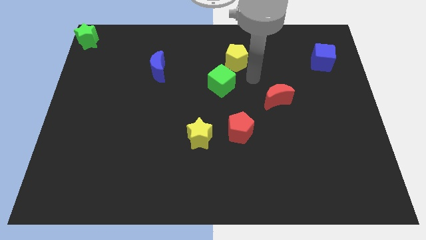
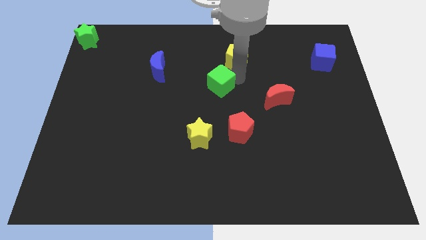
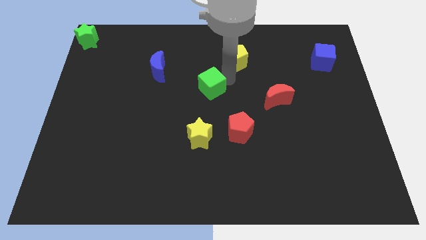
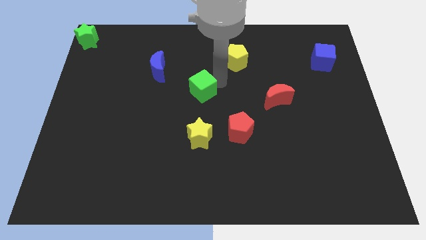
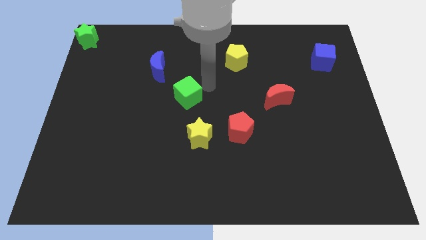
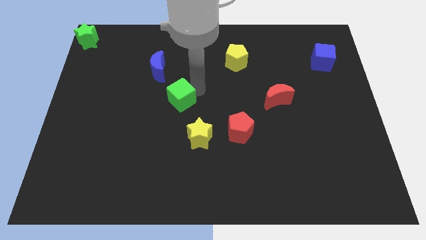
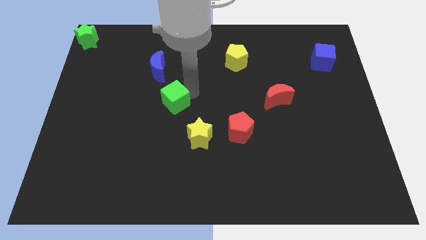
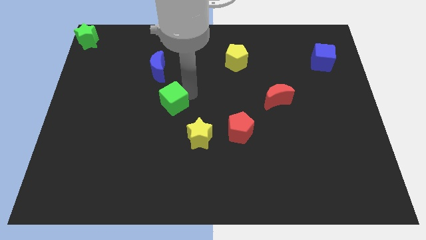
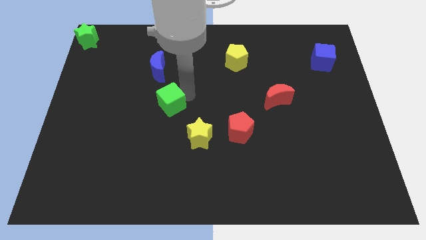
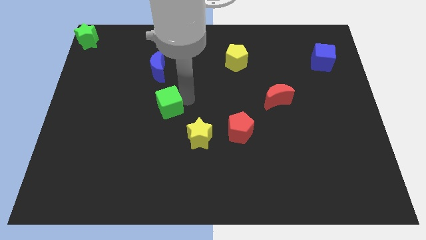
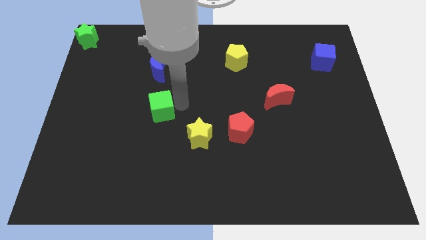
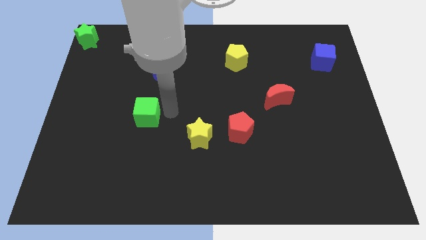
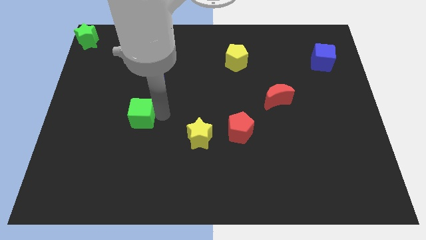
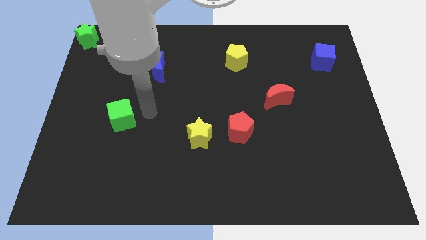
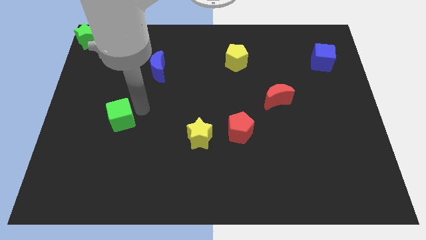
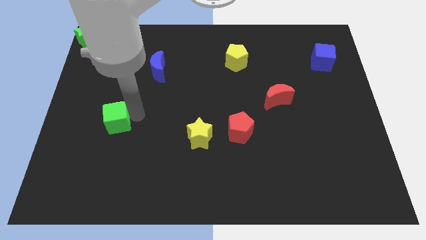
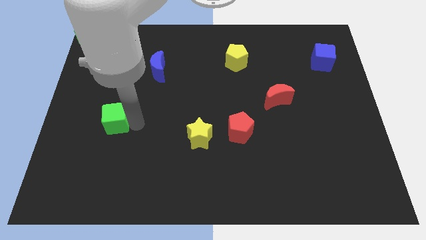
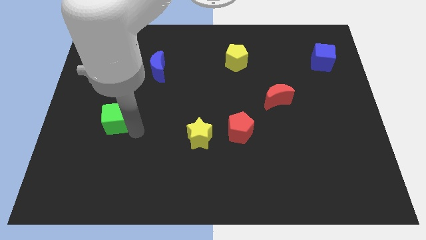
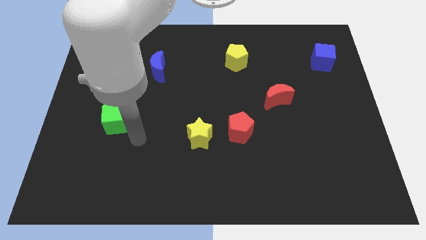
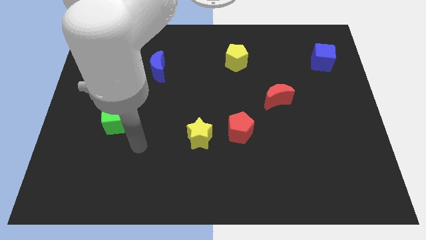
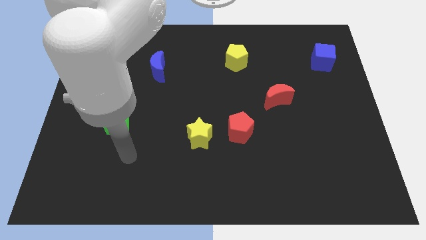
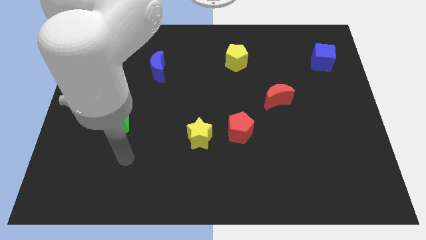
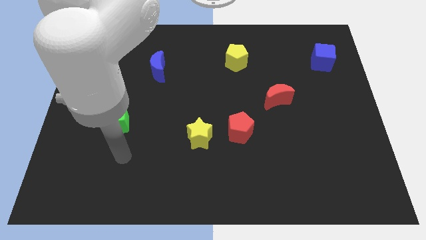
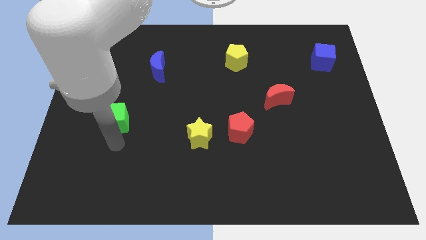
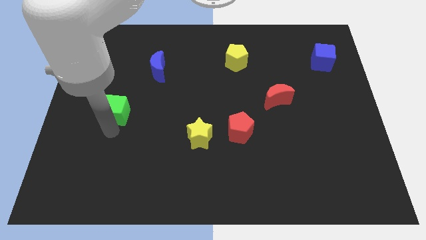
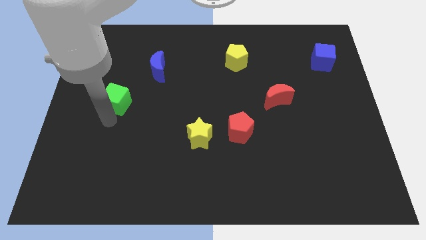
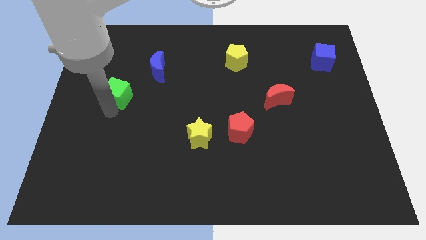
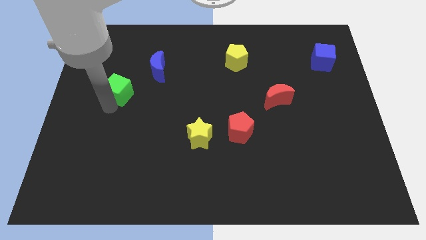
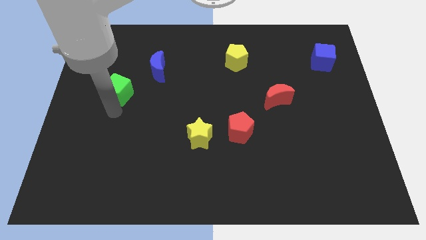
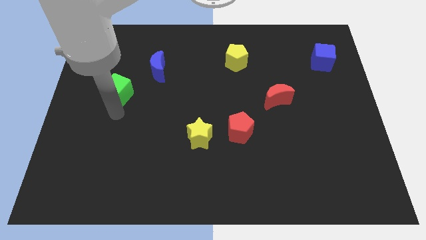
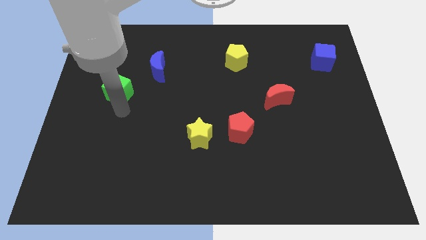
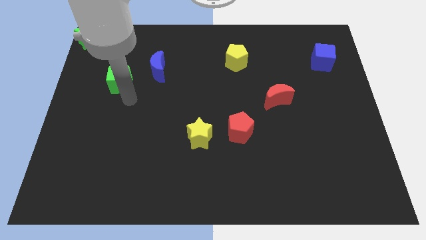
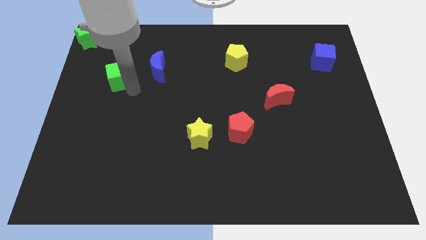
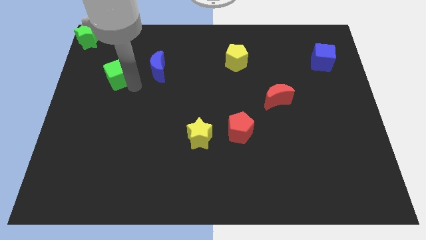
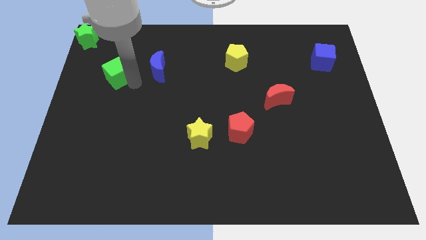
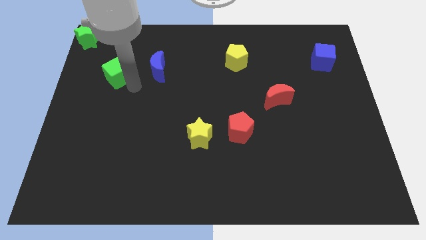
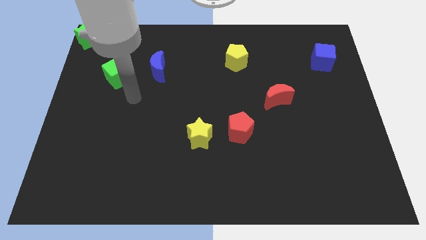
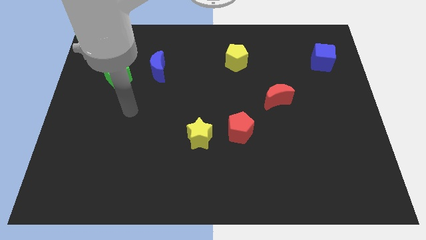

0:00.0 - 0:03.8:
place green cube to the left of blue moon

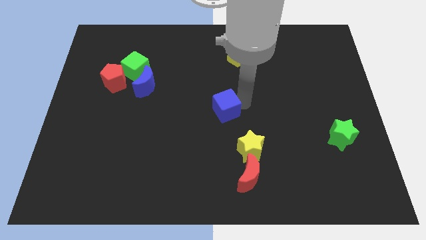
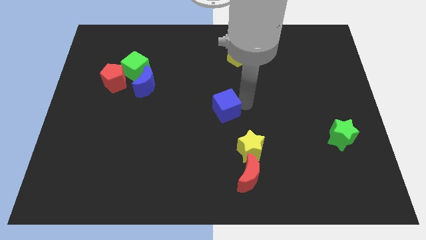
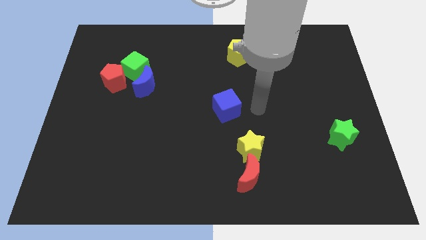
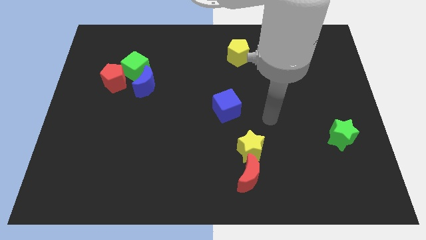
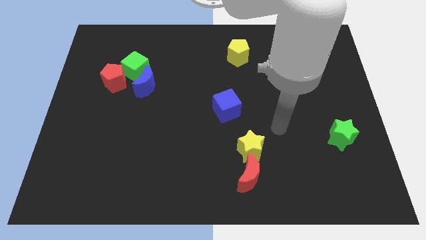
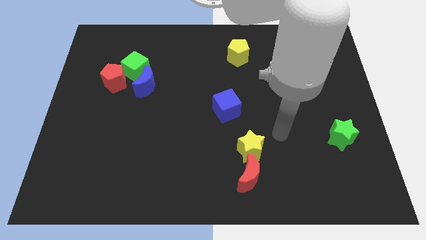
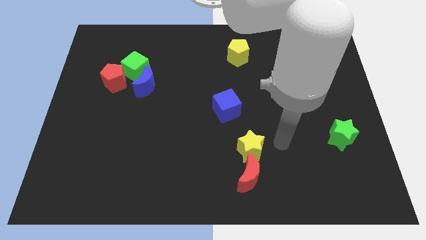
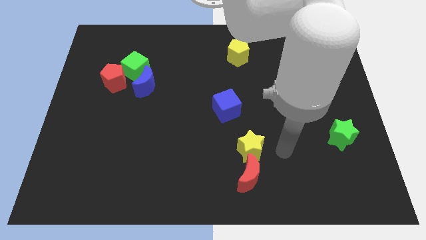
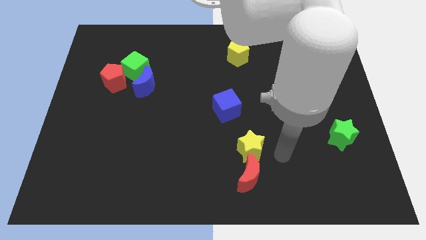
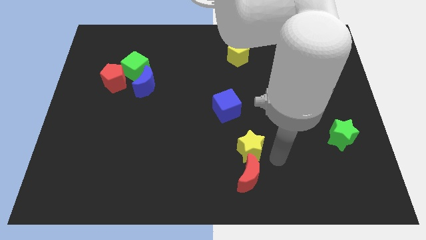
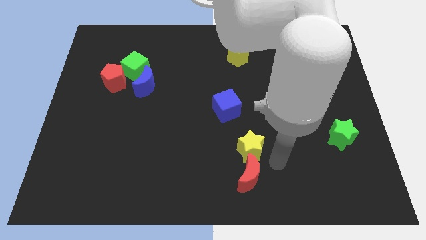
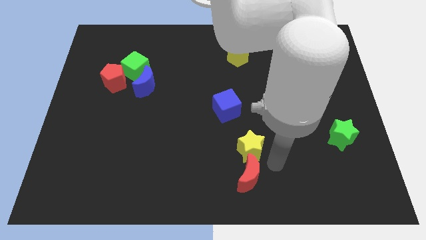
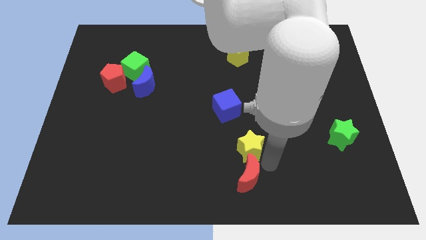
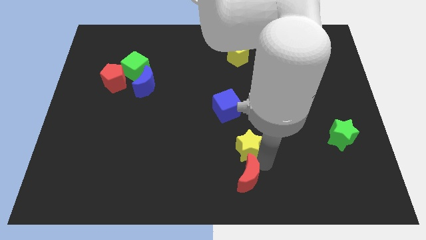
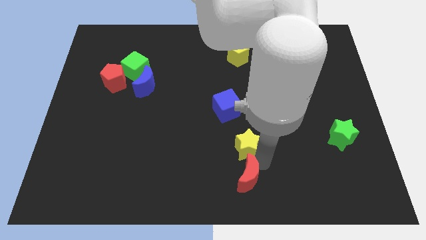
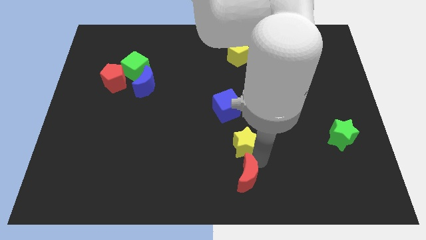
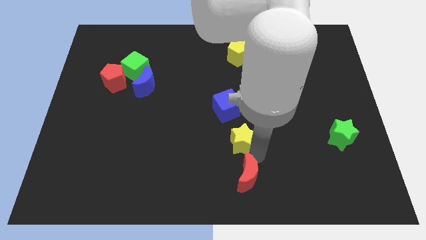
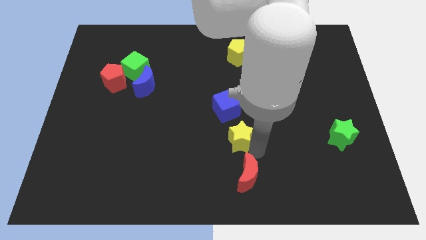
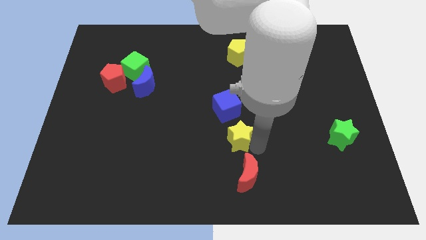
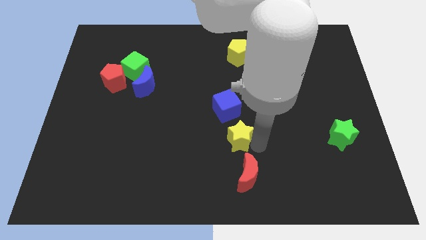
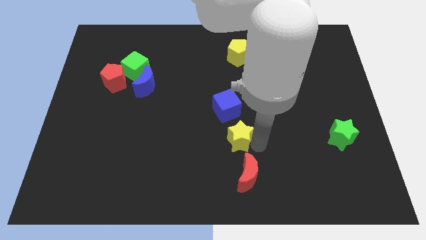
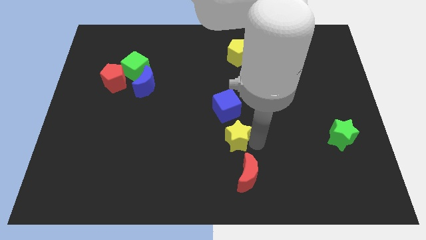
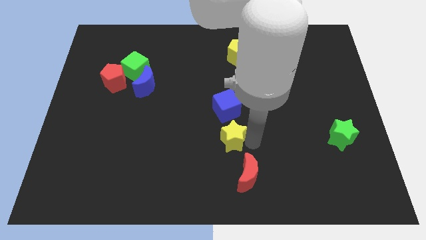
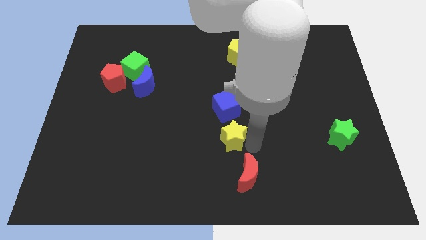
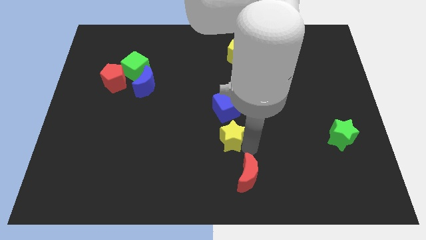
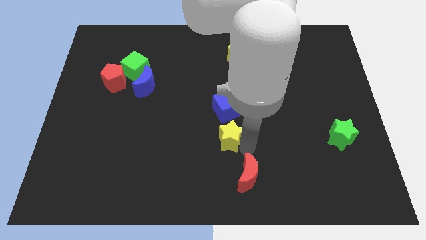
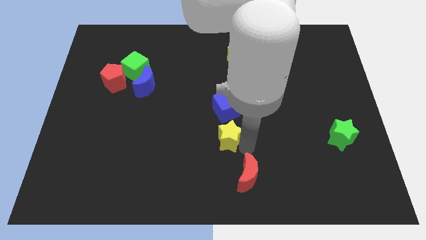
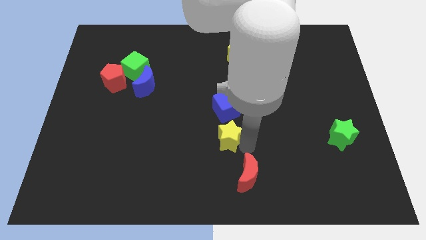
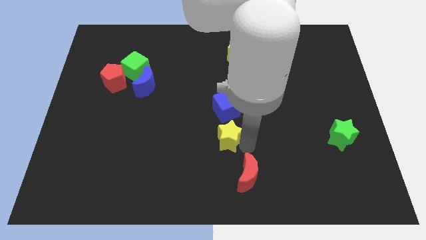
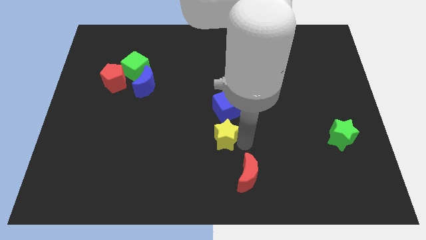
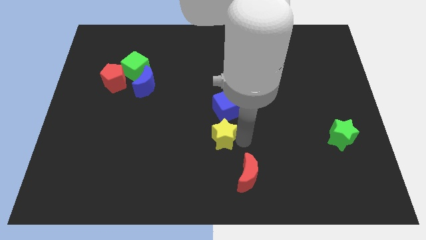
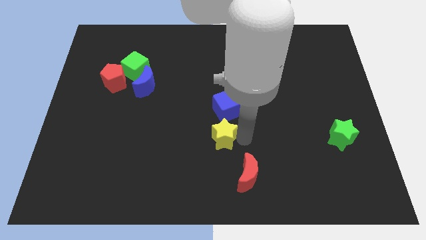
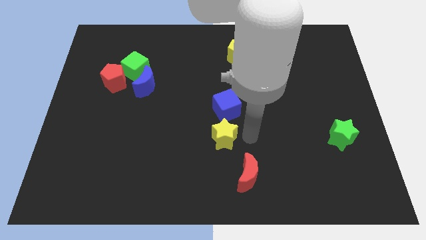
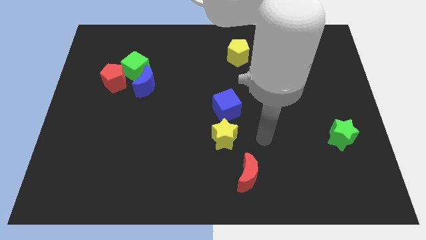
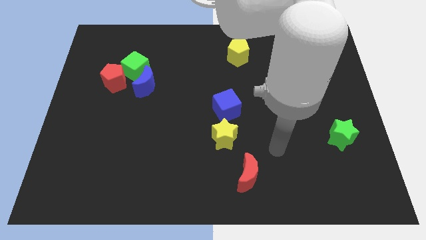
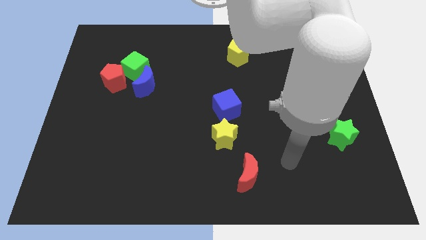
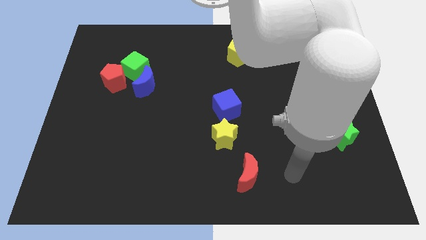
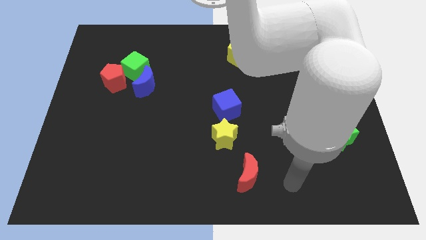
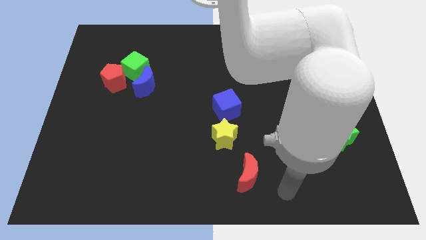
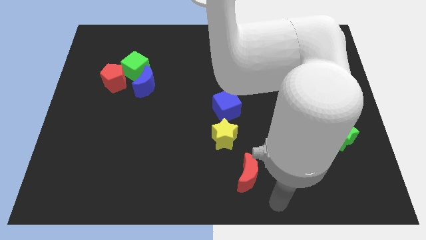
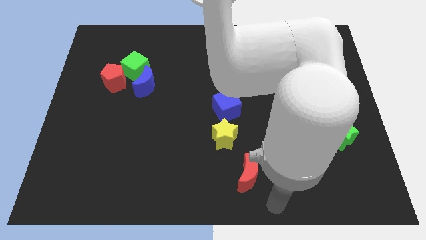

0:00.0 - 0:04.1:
place yellow star to the bottom of blue cube

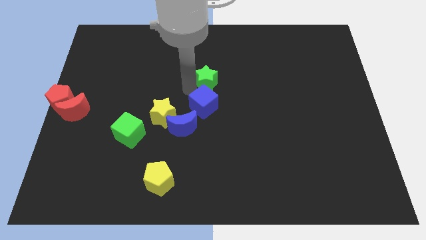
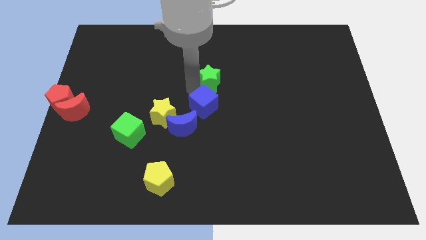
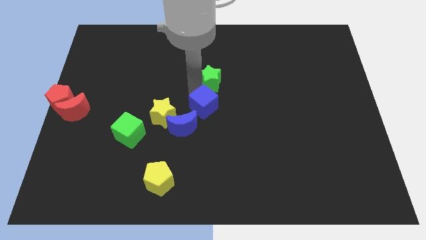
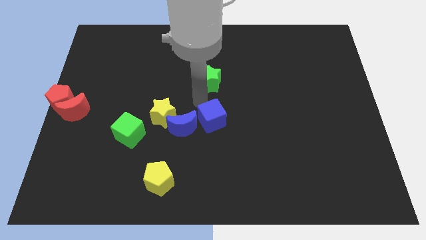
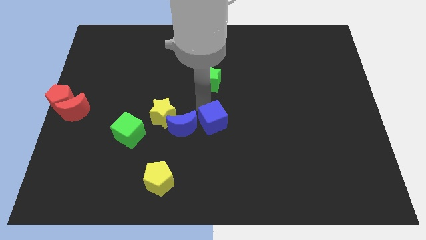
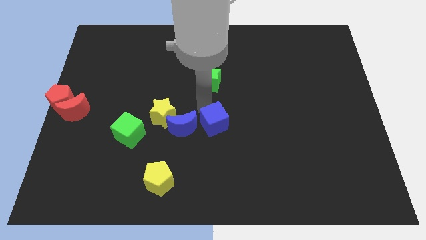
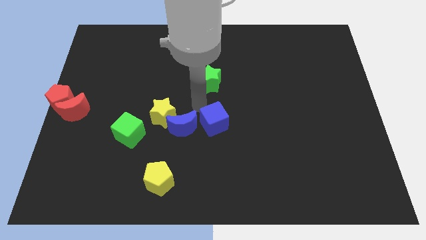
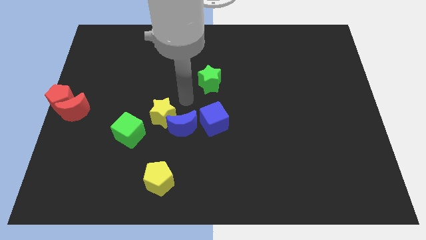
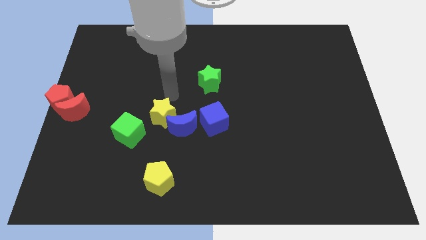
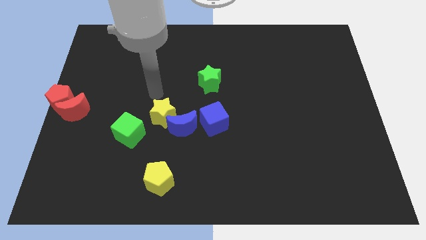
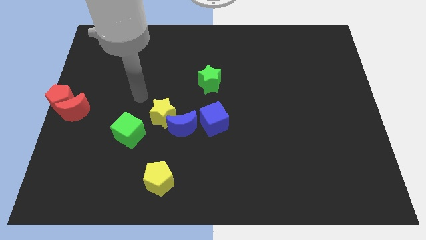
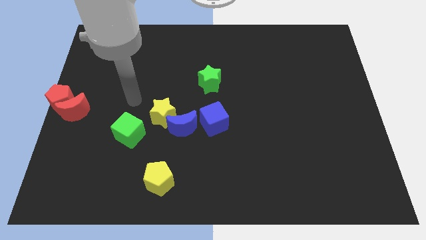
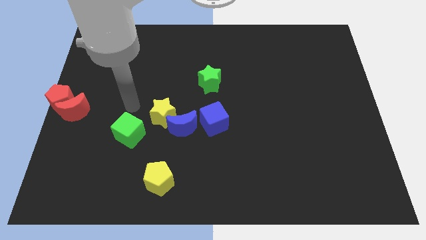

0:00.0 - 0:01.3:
move the blue cube right to the blue crescent
